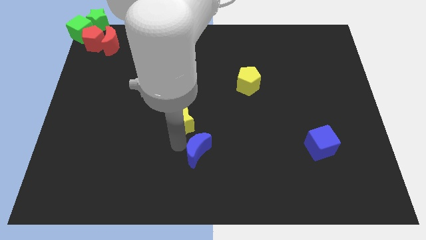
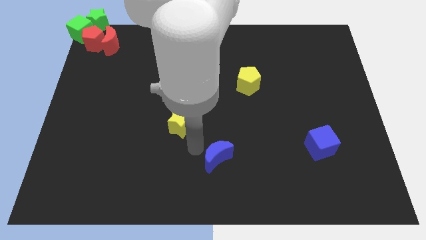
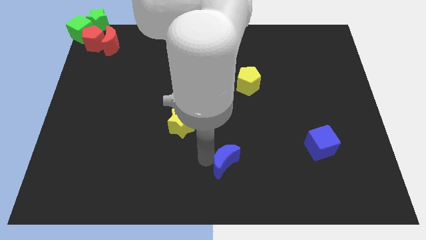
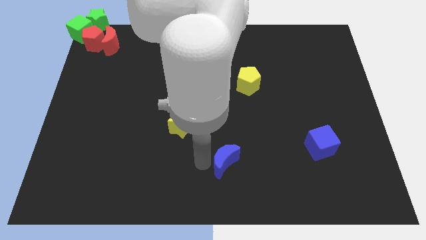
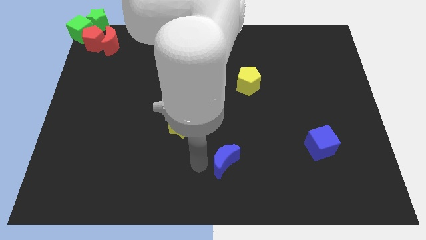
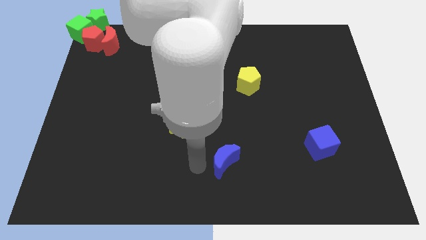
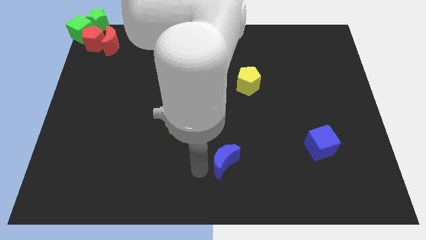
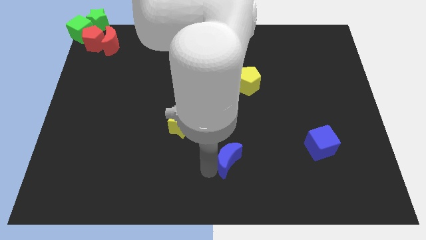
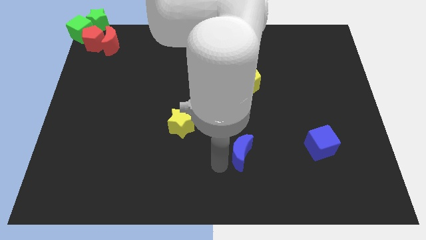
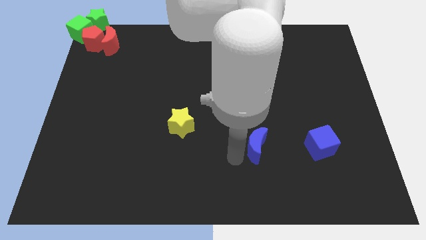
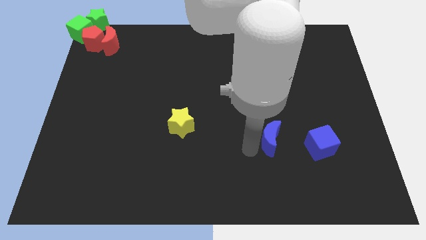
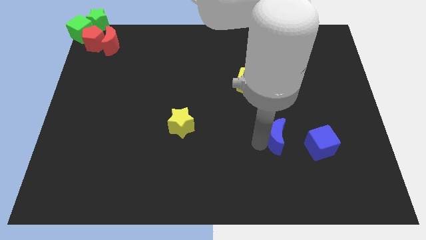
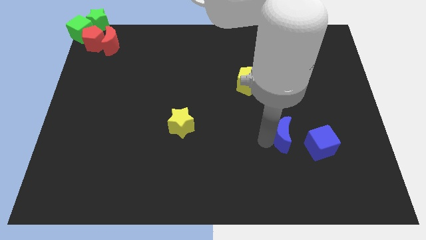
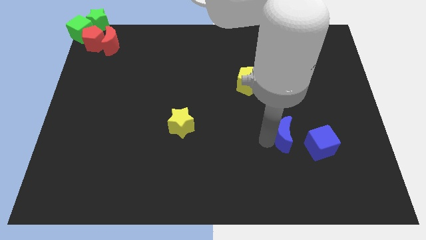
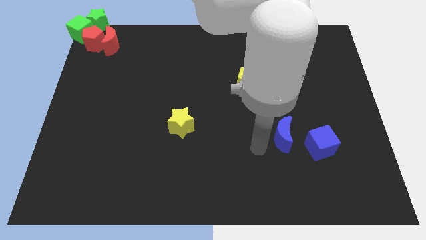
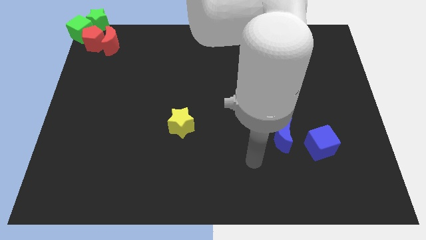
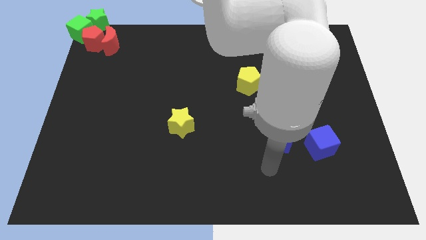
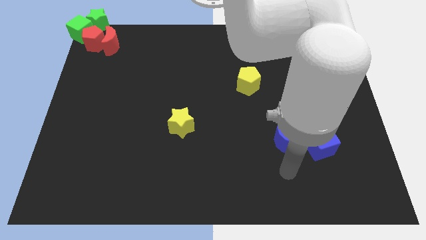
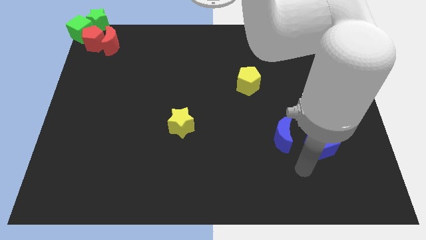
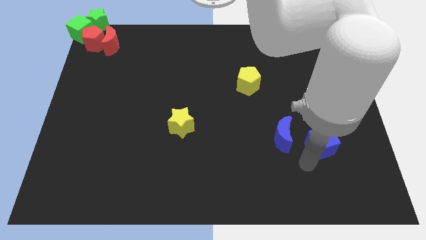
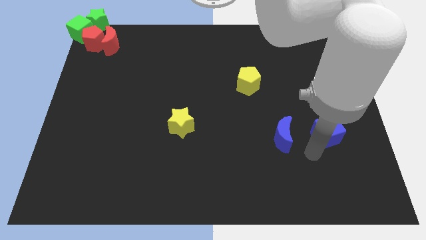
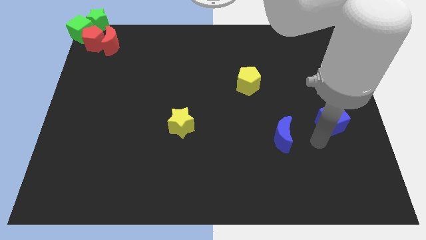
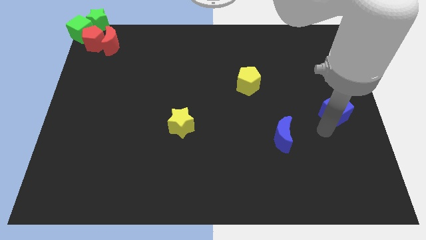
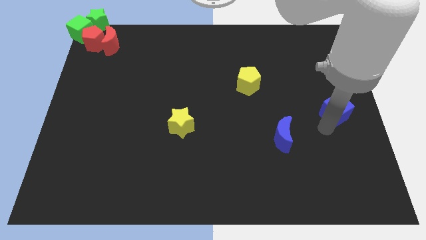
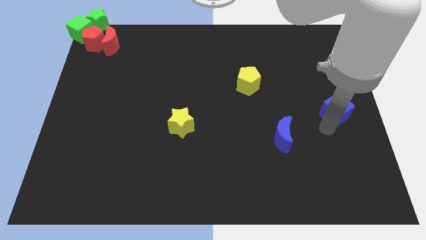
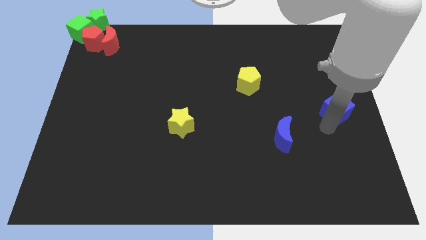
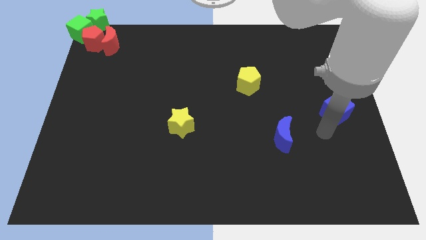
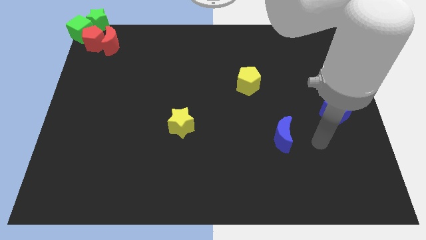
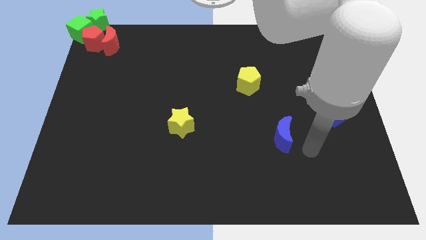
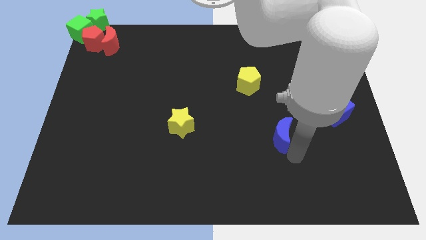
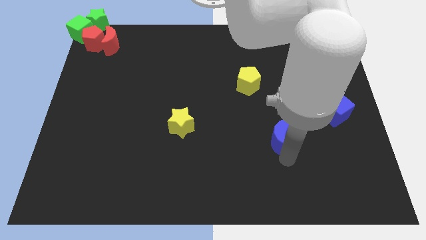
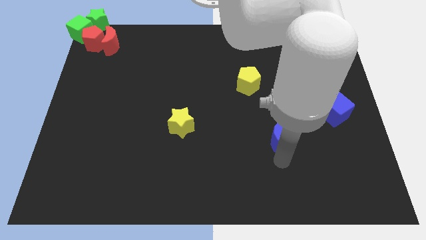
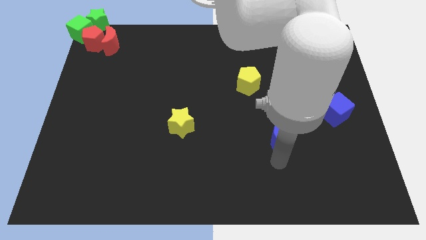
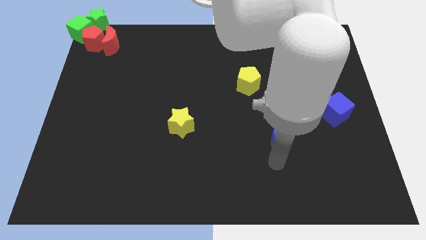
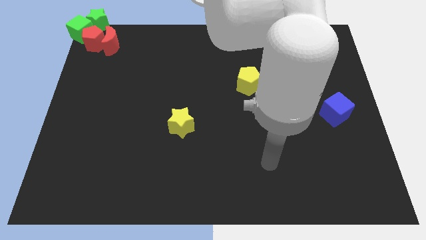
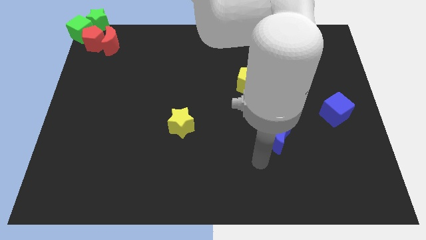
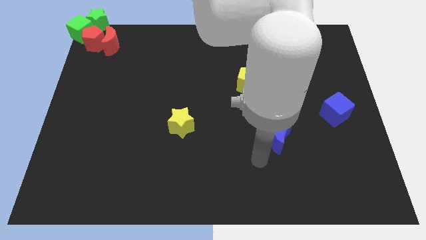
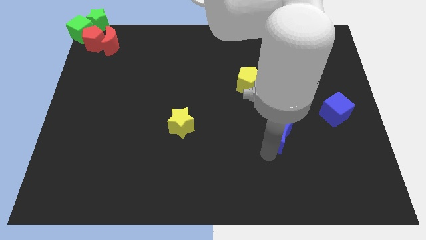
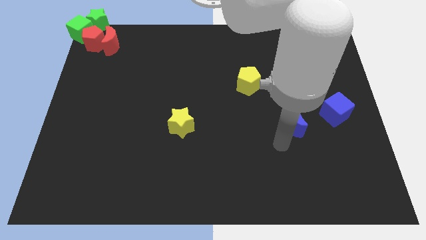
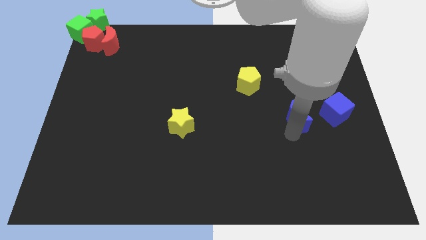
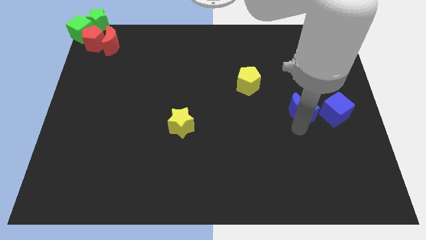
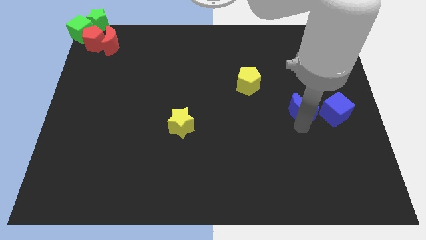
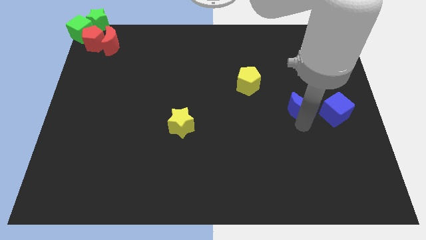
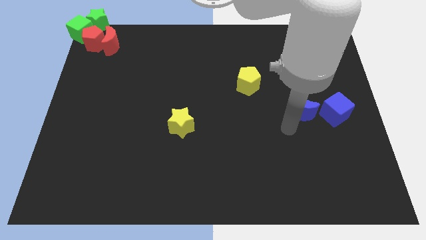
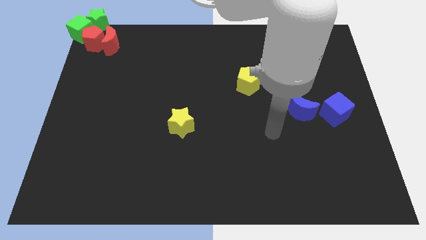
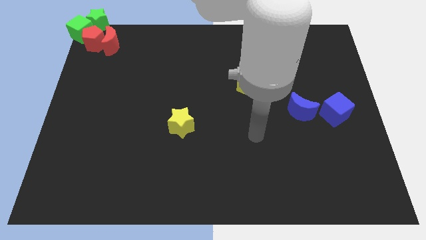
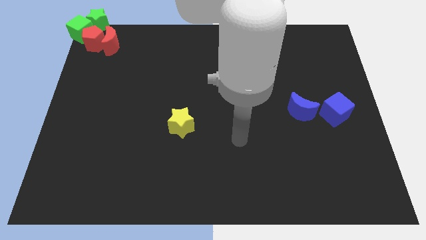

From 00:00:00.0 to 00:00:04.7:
move the blue crescent along with blue cube to the centre right of the board

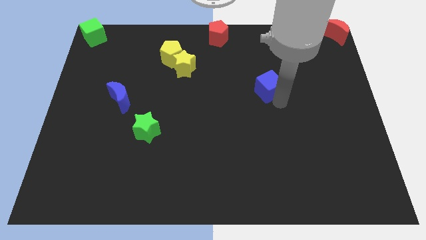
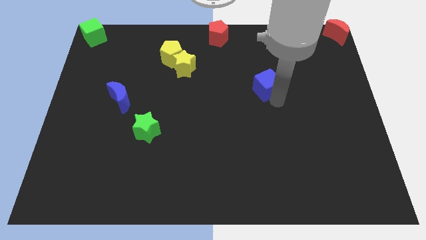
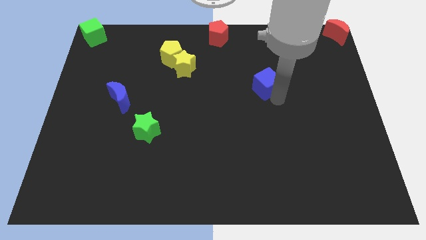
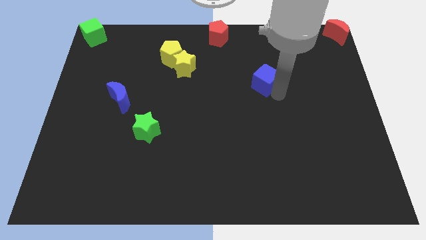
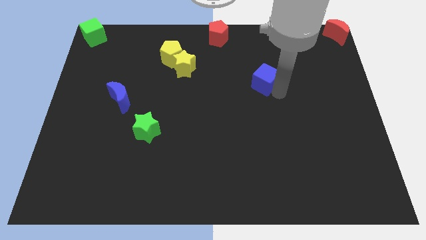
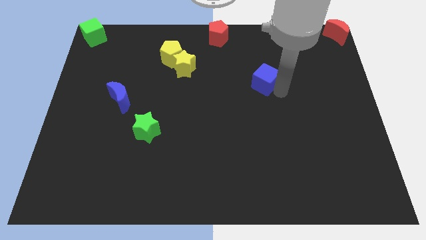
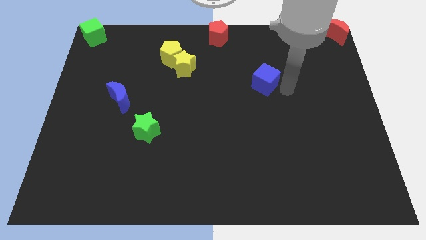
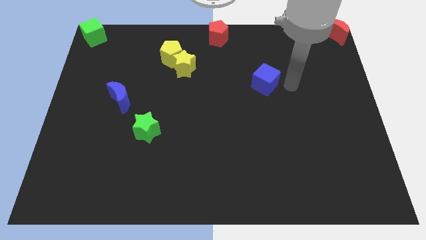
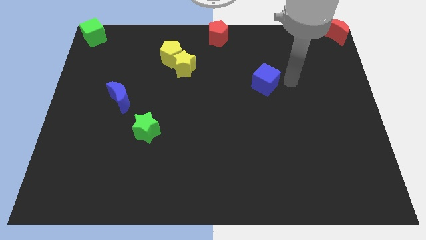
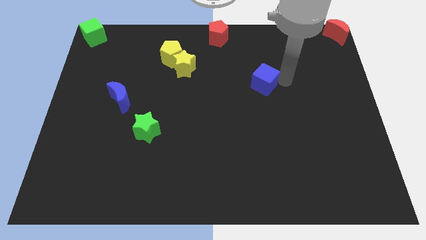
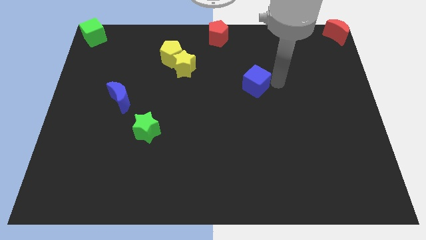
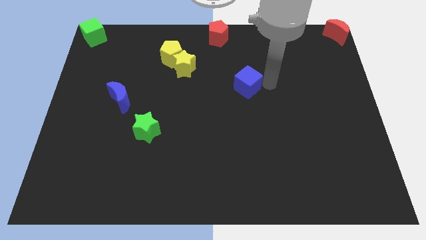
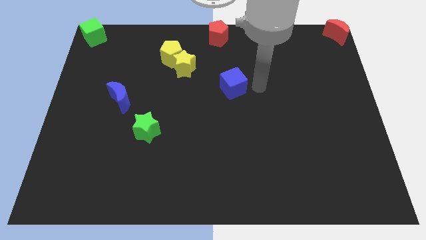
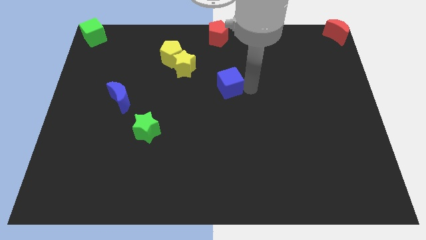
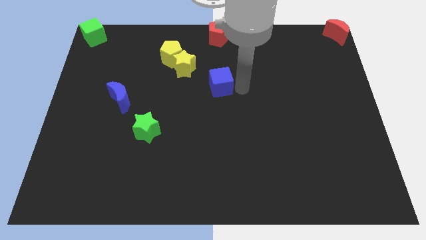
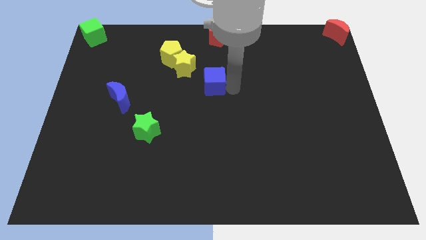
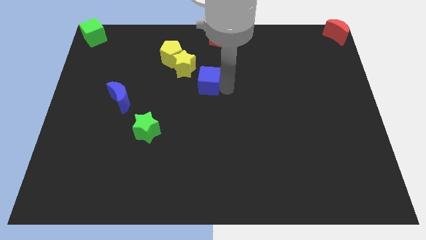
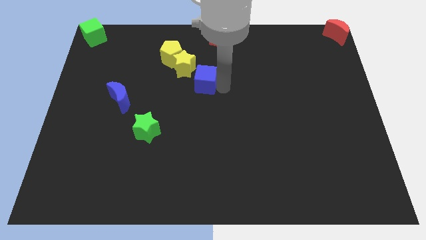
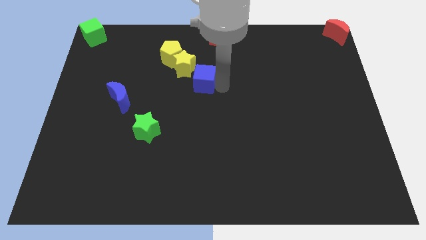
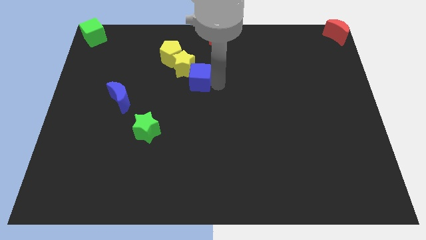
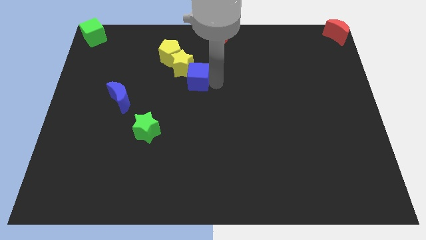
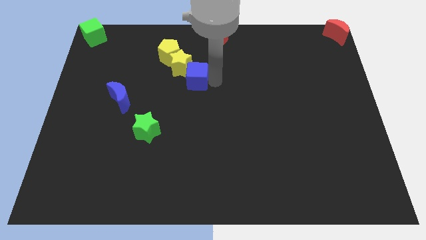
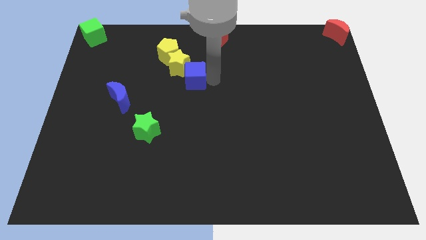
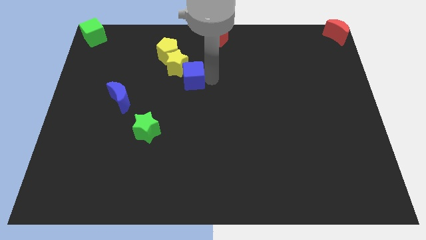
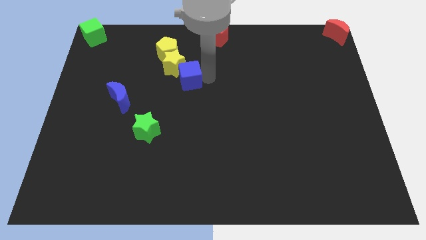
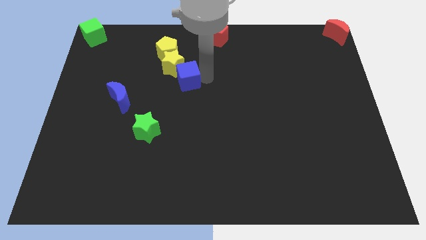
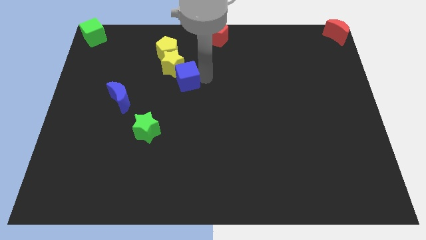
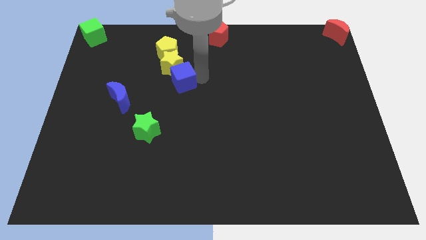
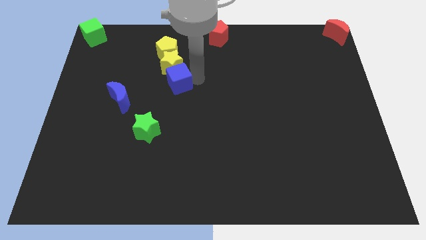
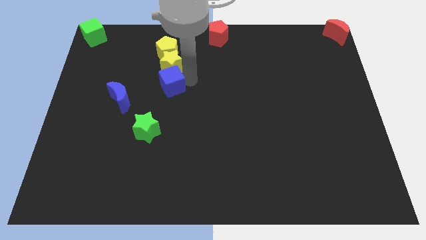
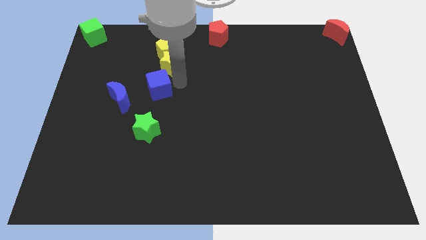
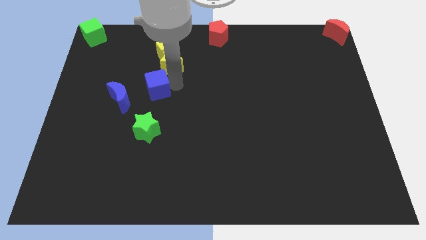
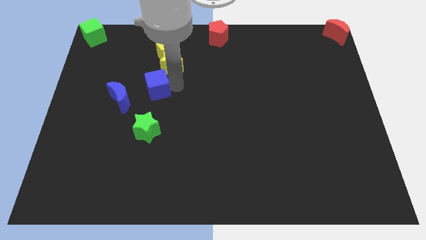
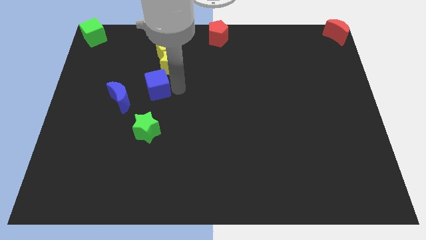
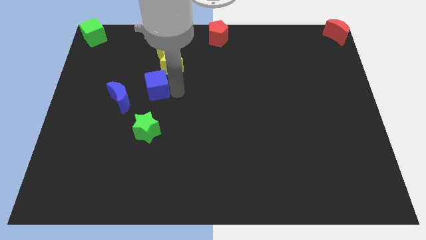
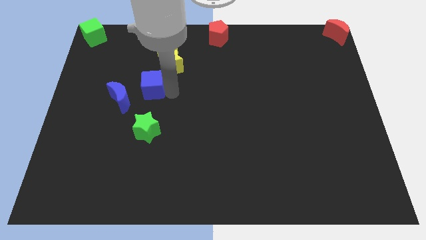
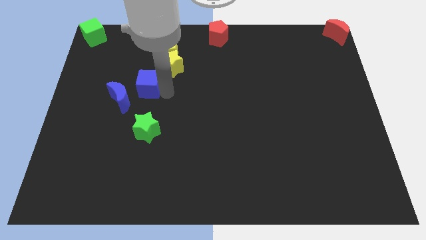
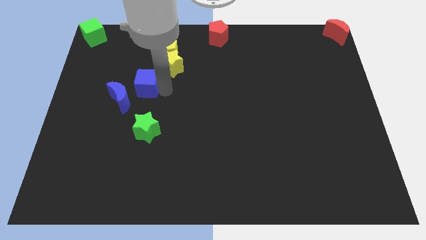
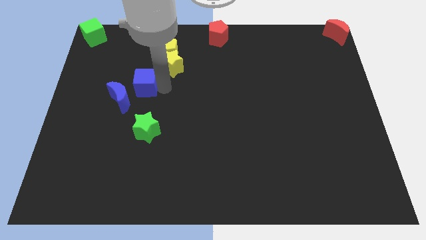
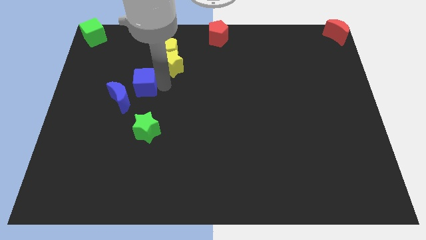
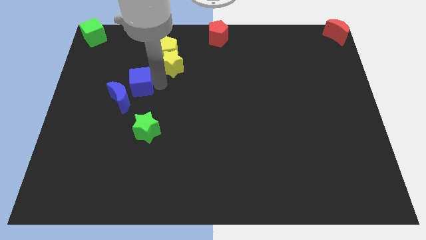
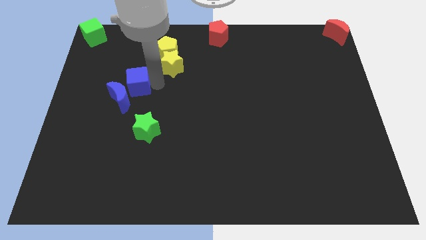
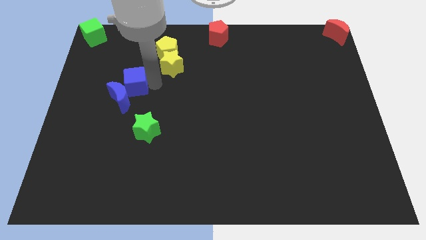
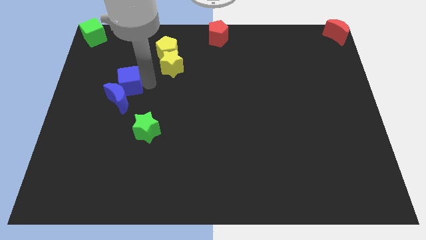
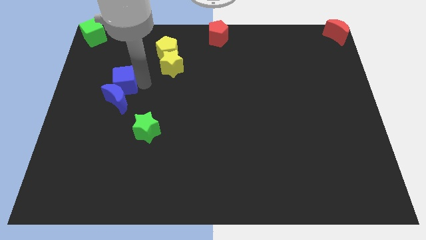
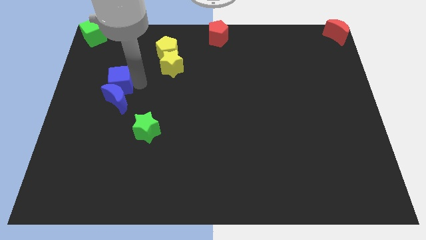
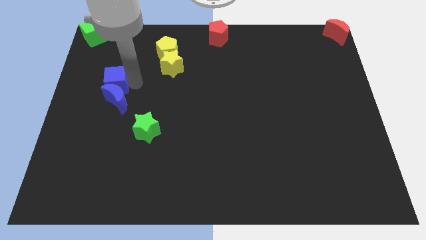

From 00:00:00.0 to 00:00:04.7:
push the blue cube into the yellow star
